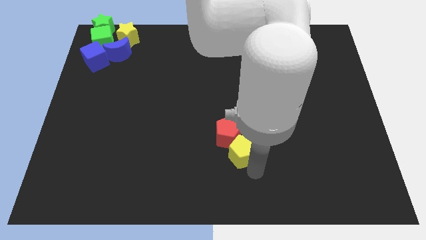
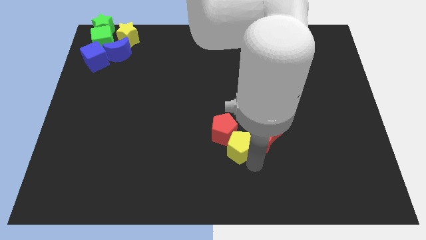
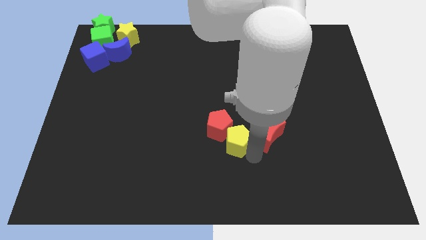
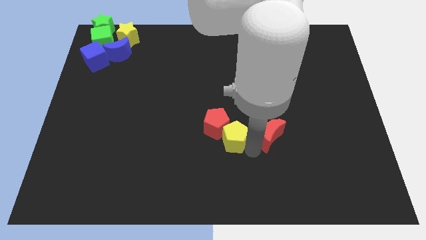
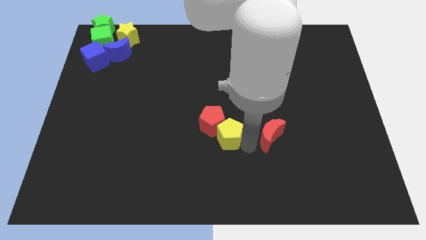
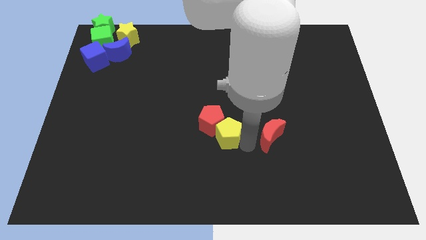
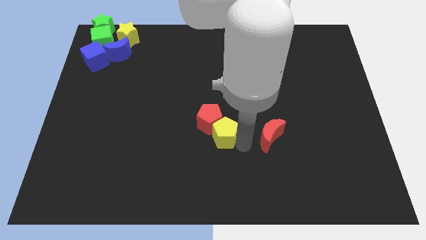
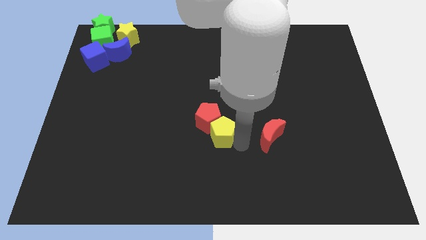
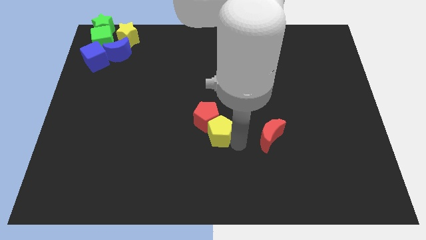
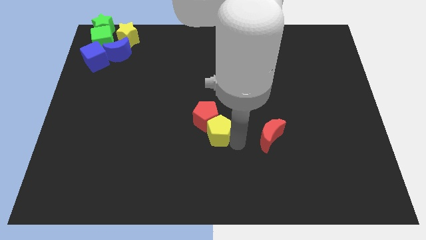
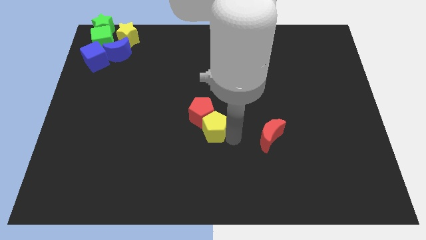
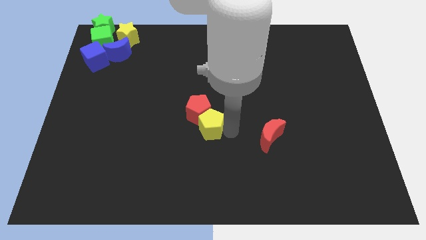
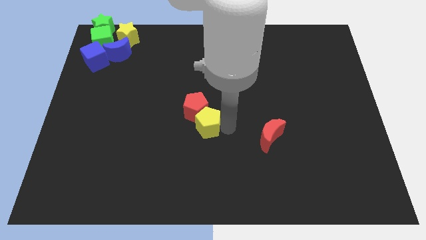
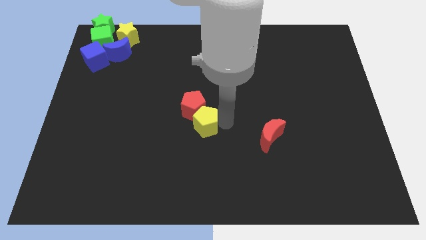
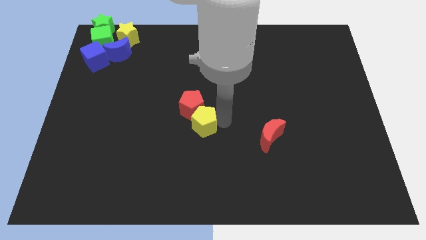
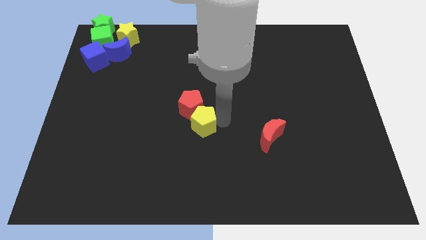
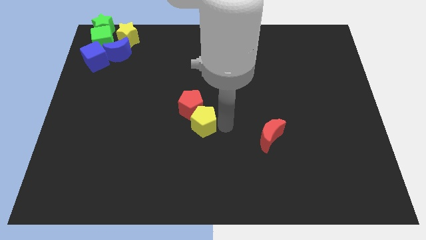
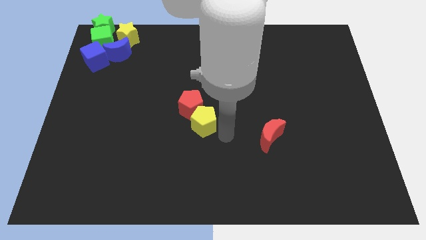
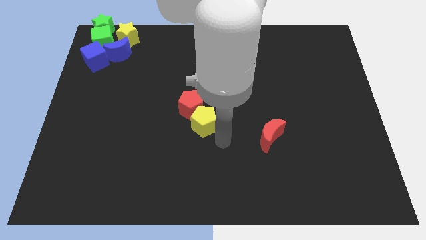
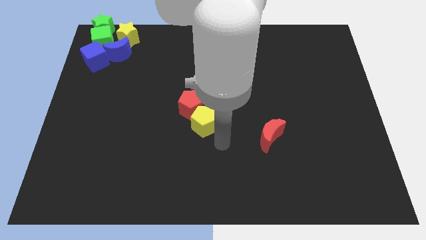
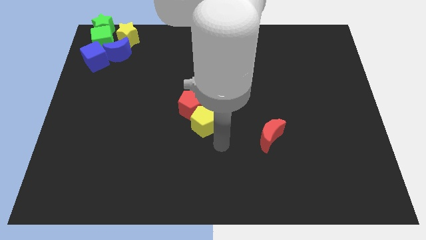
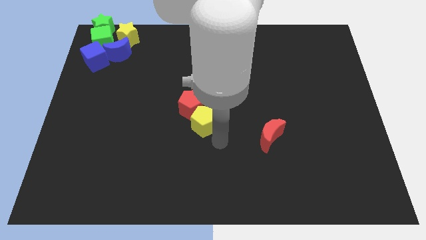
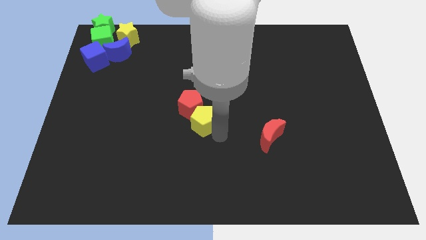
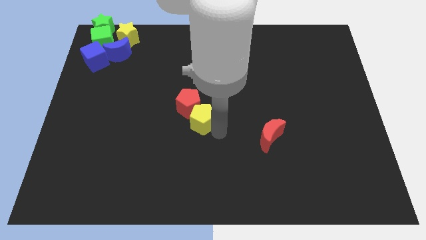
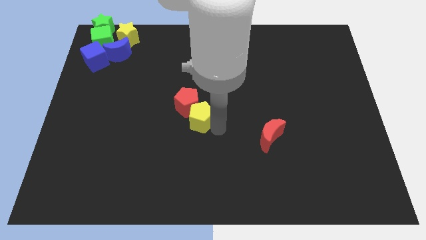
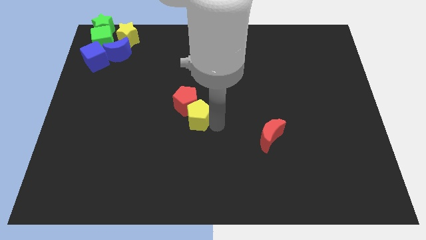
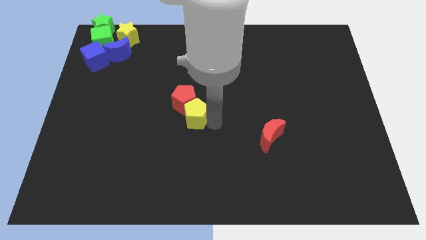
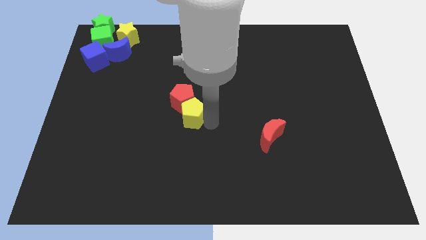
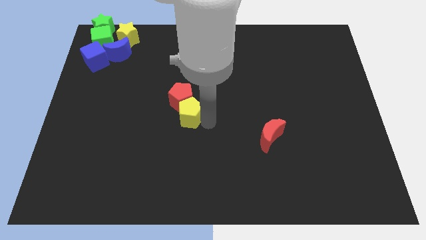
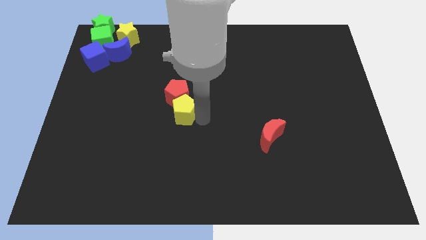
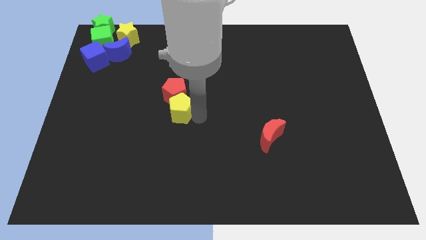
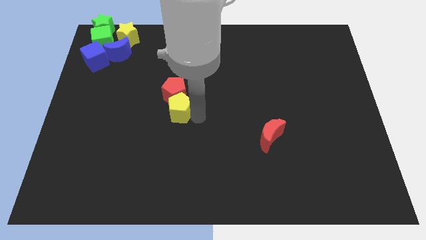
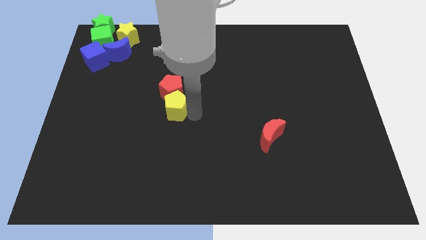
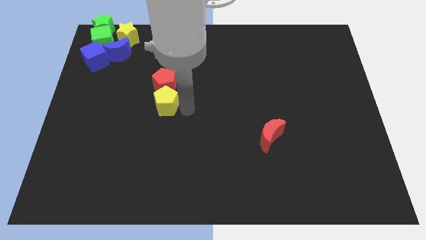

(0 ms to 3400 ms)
move the yellow pentagon and red pentagon diagonally up

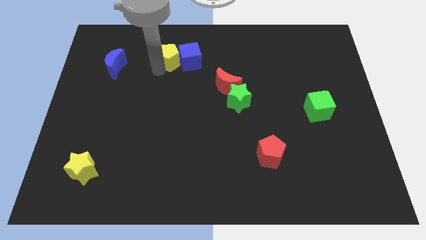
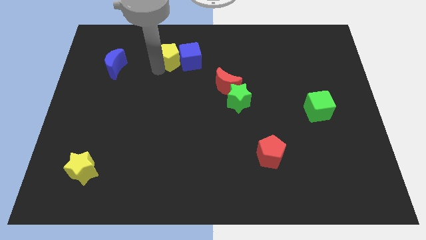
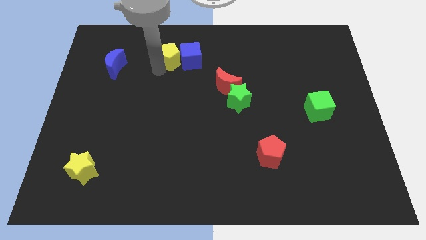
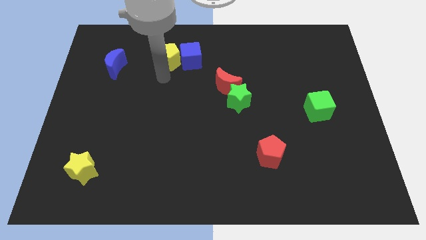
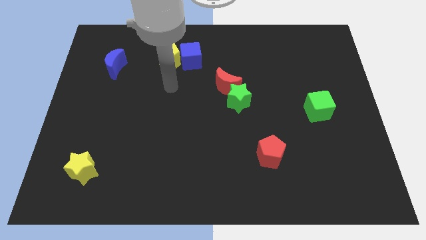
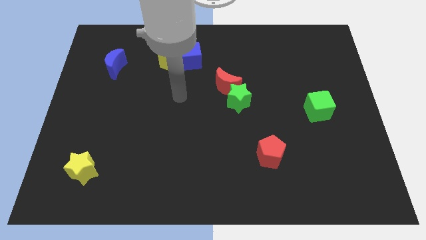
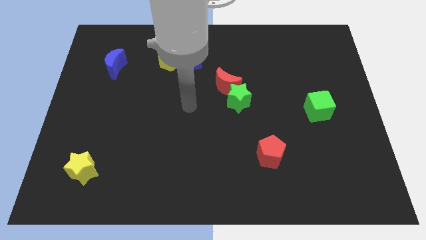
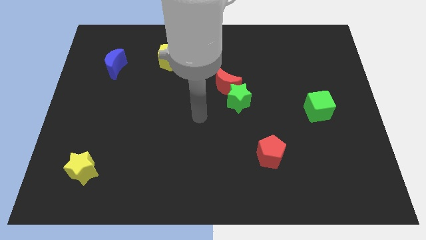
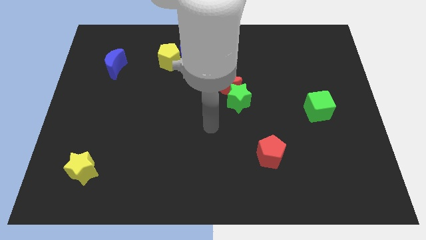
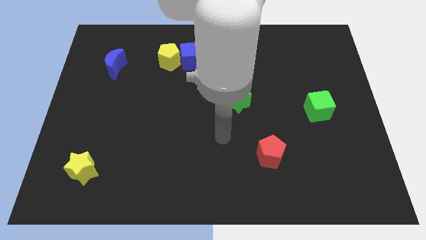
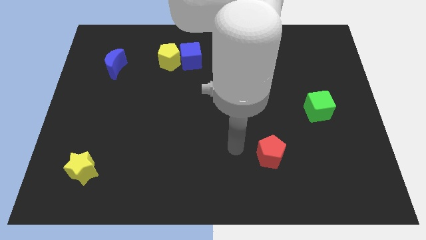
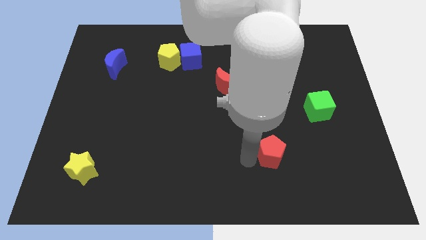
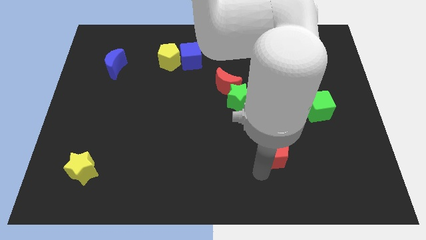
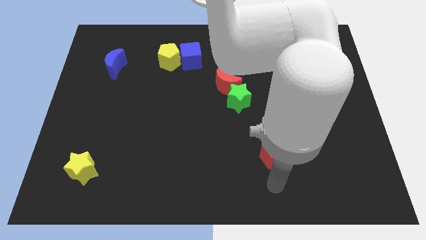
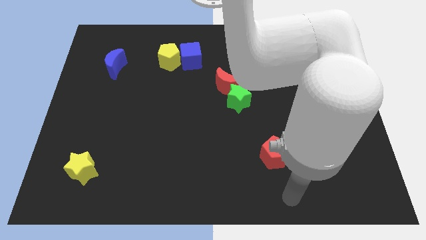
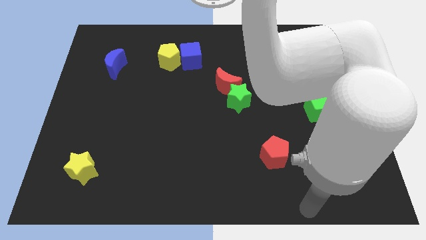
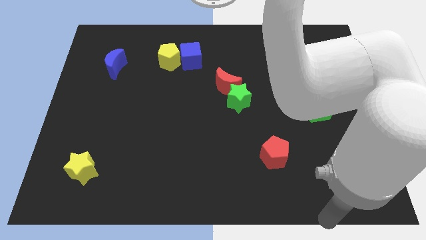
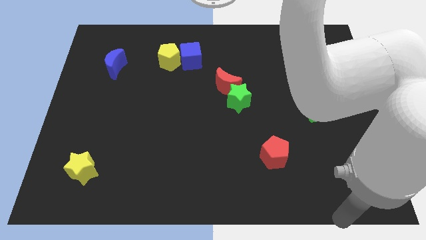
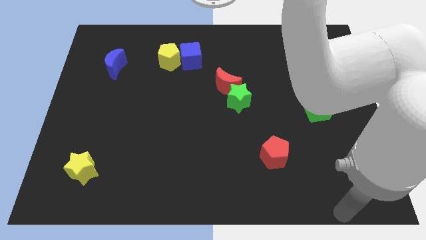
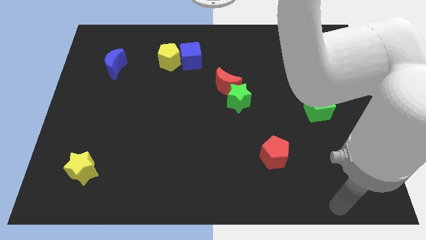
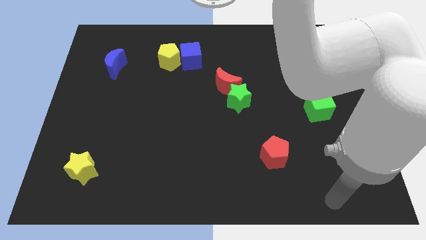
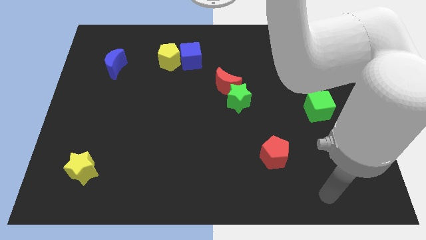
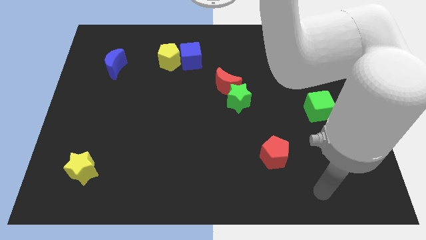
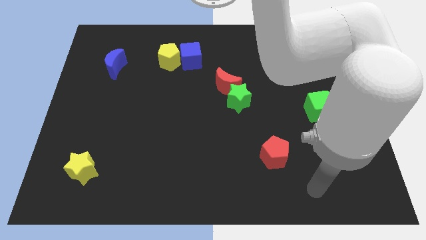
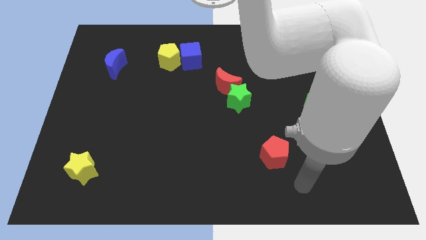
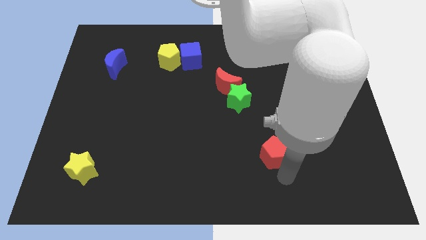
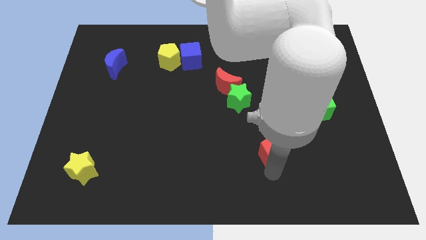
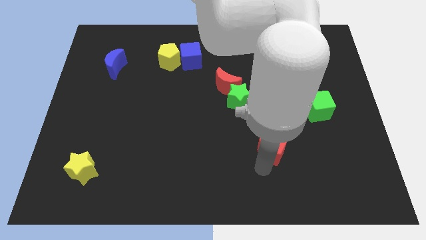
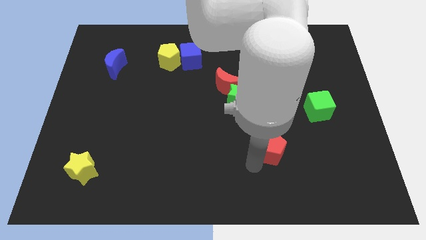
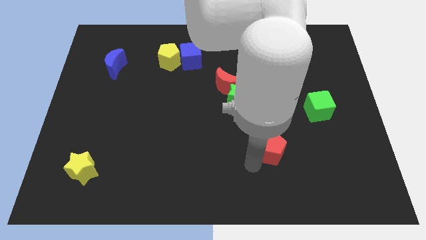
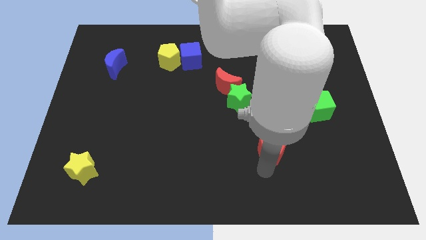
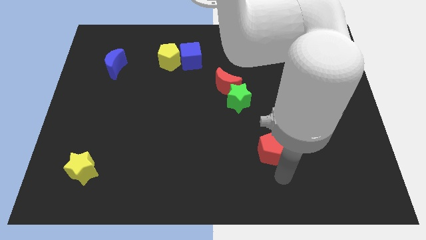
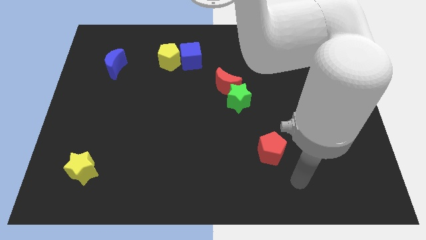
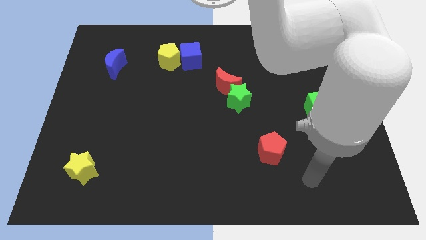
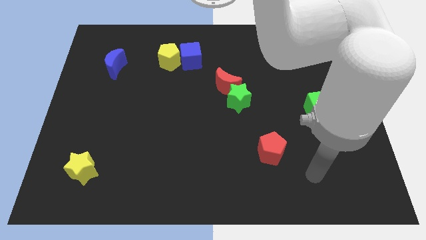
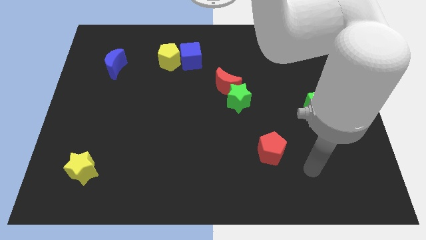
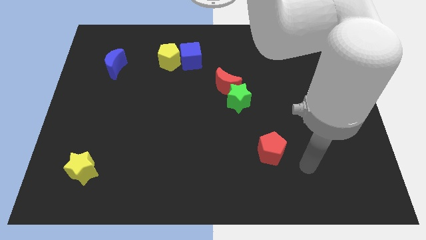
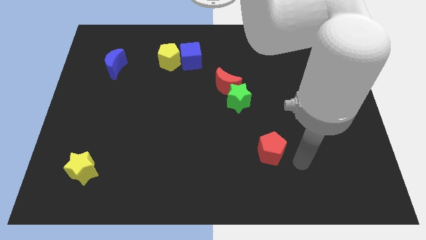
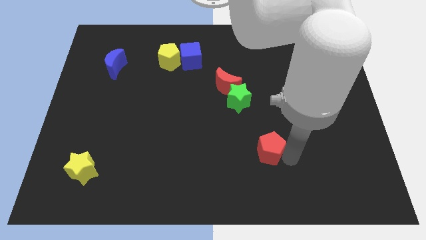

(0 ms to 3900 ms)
move your arm close to the red pentagon

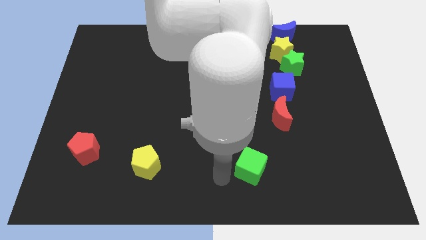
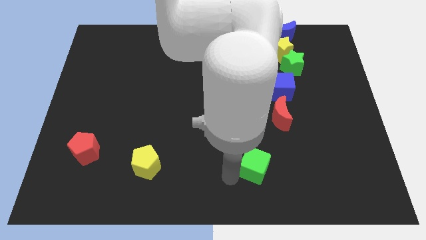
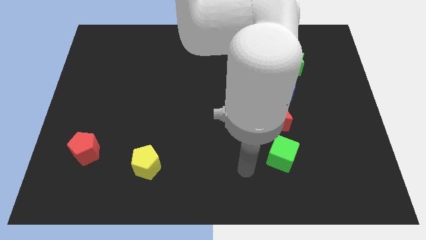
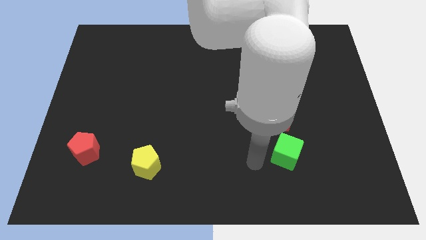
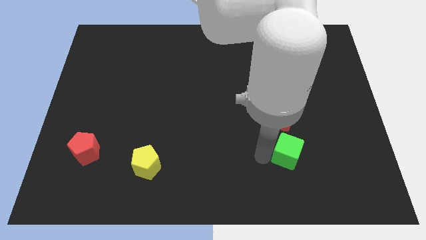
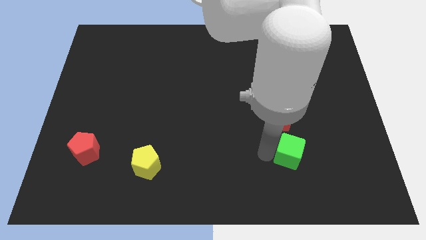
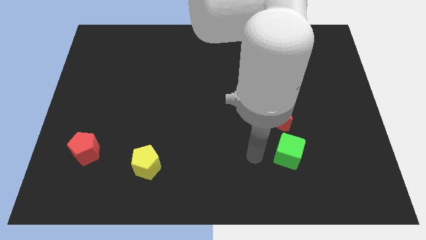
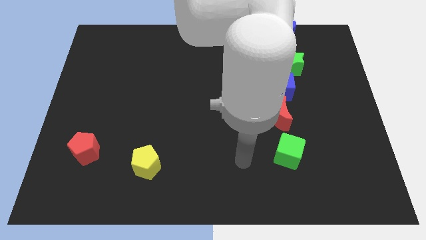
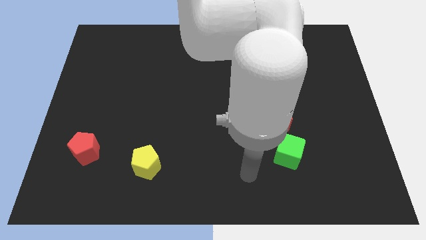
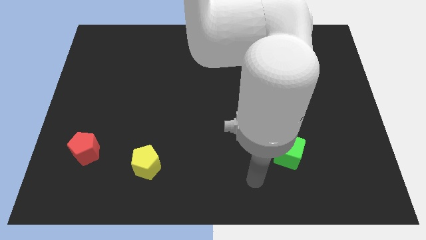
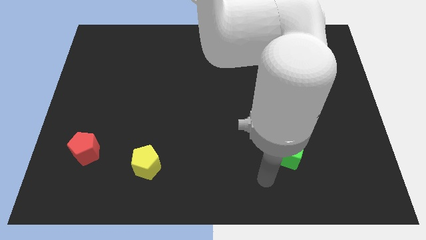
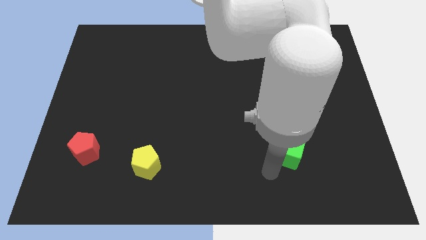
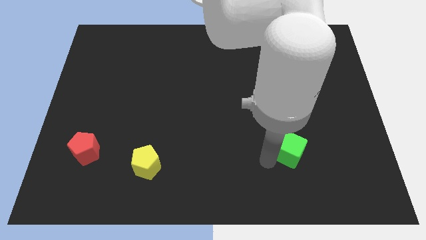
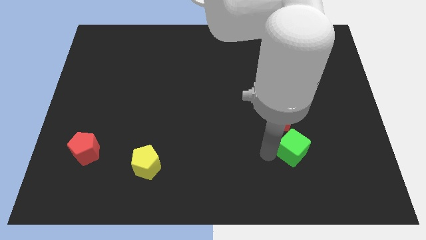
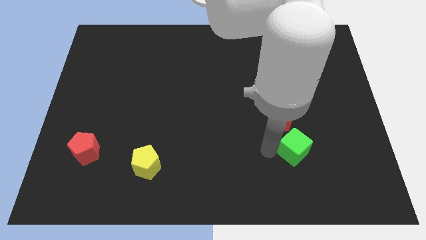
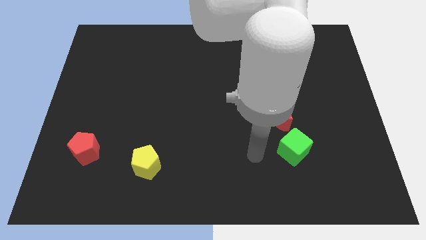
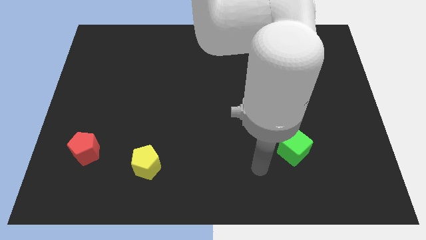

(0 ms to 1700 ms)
move the green cube to the bottom side of the red moon
